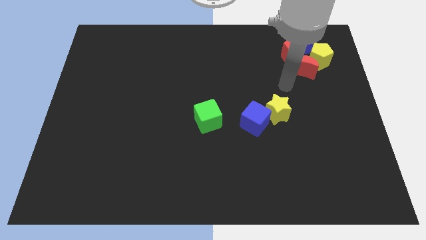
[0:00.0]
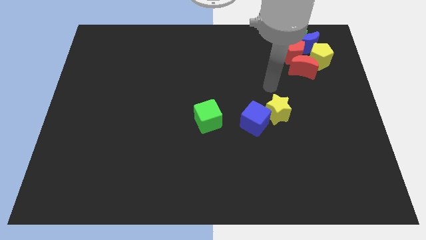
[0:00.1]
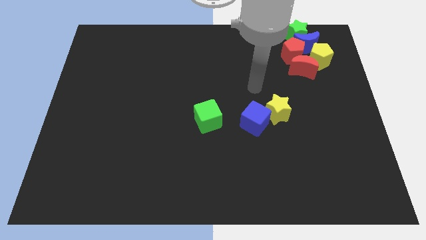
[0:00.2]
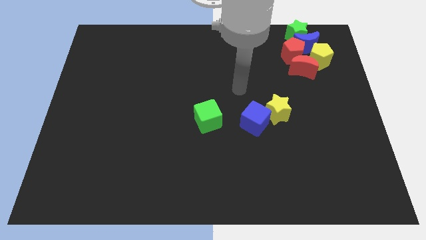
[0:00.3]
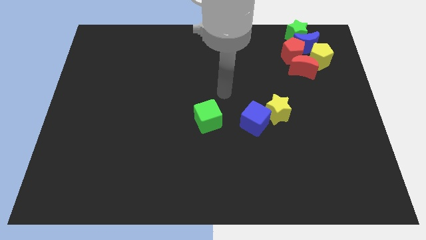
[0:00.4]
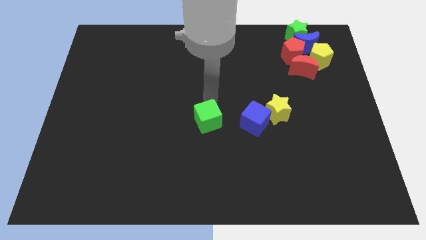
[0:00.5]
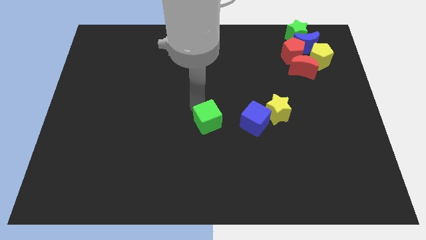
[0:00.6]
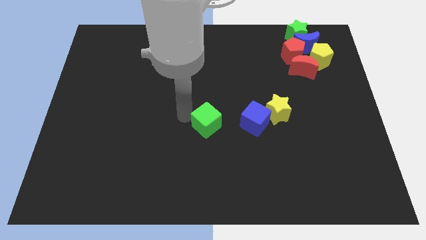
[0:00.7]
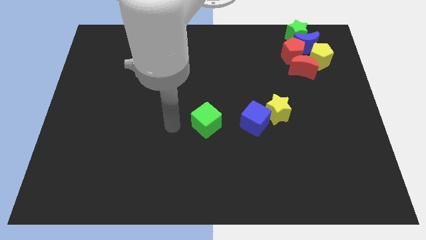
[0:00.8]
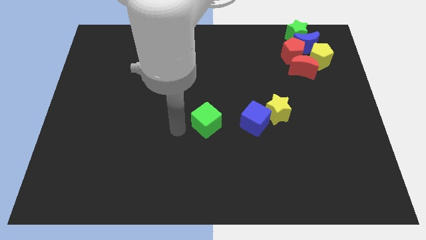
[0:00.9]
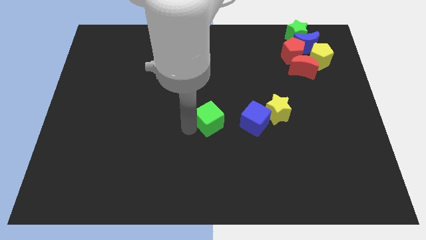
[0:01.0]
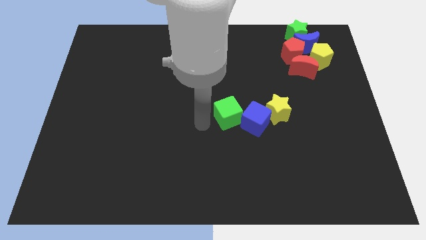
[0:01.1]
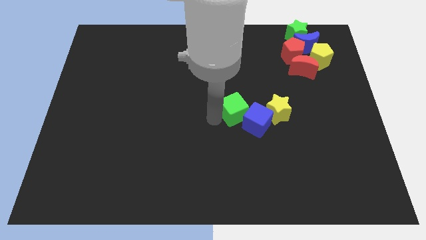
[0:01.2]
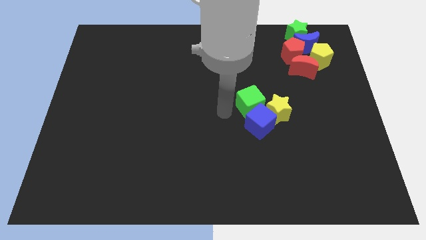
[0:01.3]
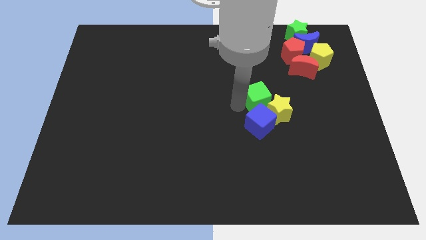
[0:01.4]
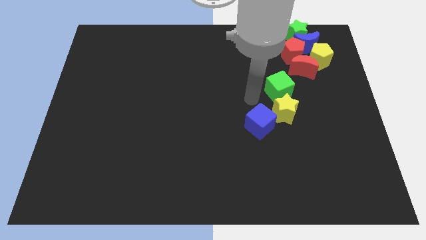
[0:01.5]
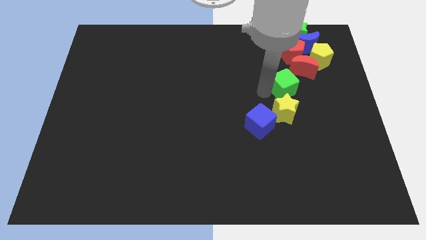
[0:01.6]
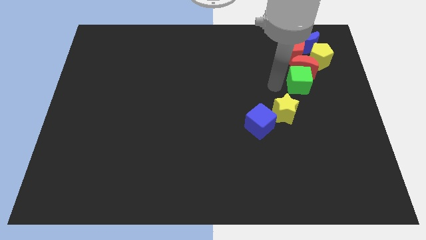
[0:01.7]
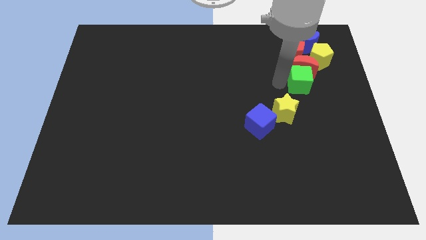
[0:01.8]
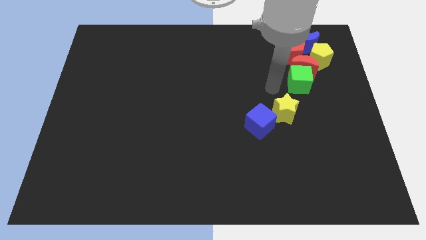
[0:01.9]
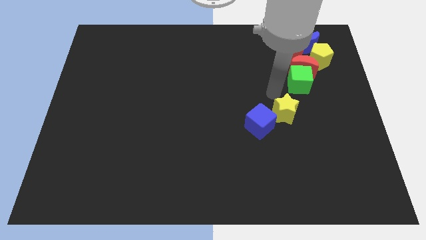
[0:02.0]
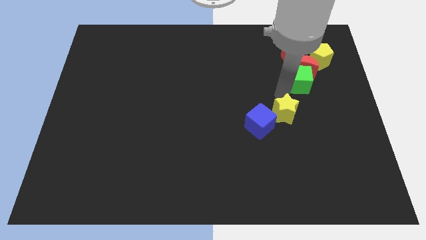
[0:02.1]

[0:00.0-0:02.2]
place the green cube below the red crescent

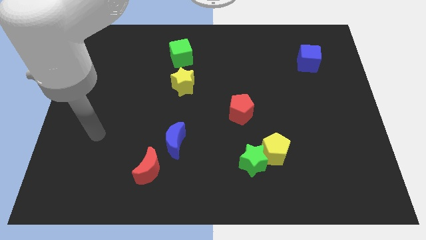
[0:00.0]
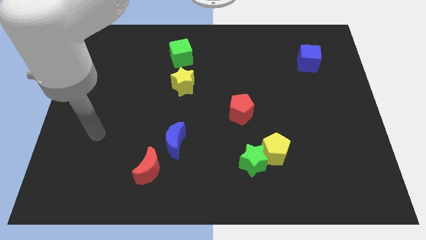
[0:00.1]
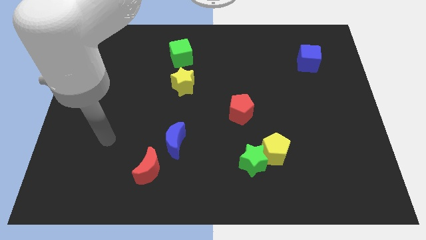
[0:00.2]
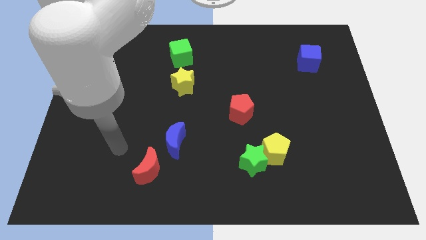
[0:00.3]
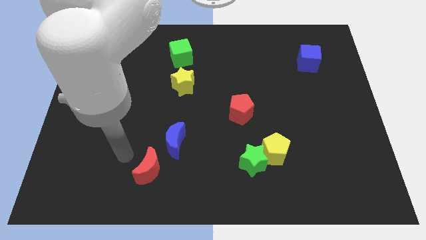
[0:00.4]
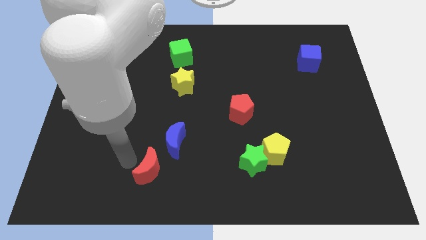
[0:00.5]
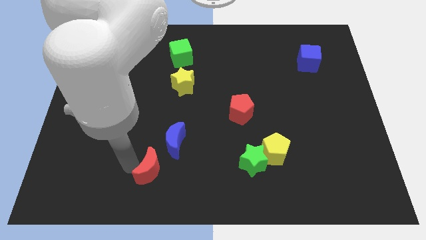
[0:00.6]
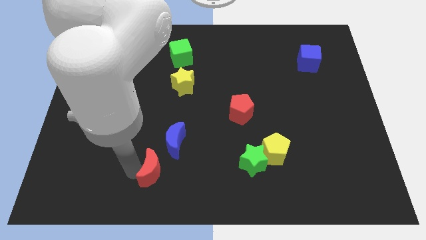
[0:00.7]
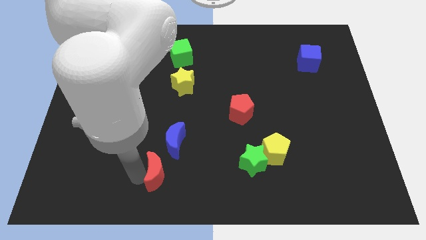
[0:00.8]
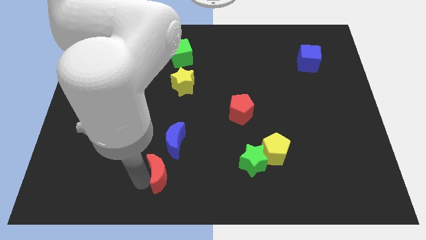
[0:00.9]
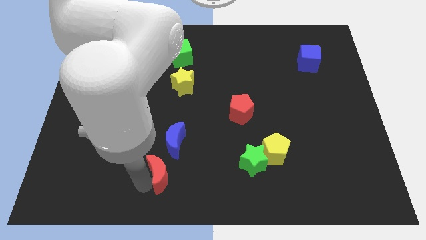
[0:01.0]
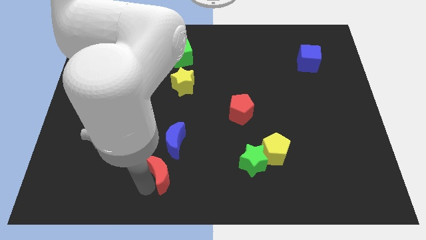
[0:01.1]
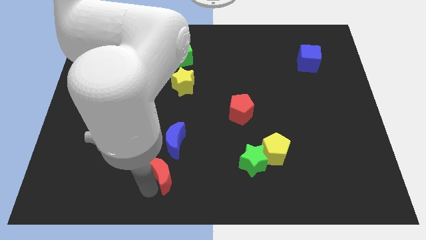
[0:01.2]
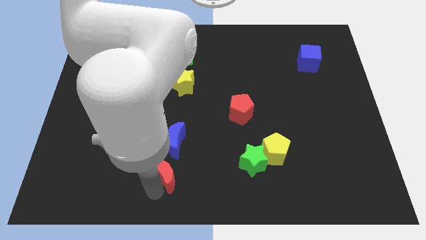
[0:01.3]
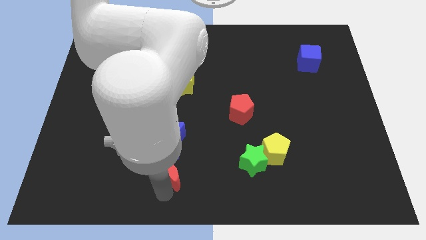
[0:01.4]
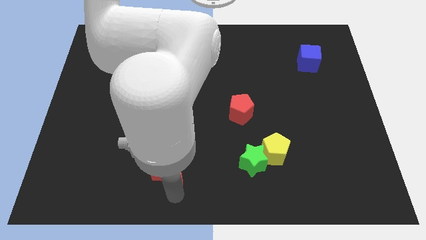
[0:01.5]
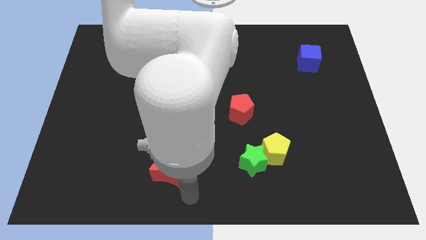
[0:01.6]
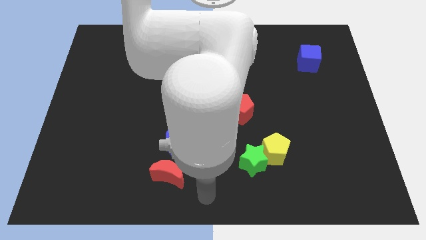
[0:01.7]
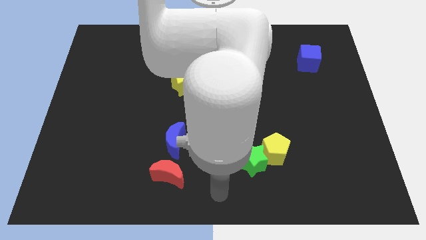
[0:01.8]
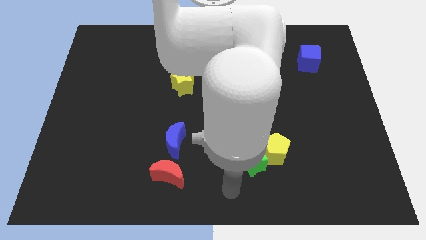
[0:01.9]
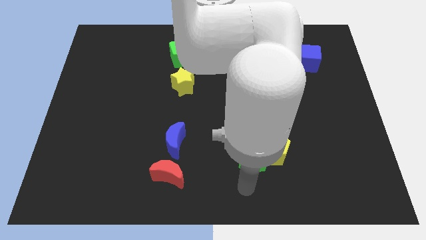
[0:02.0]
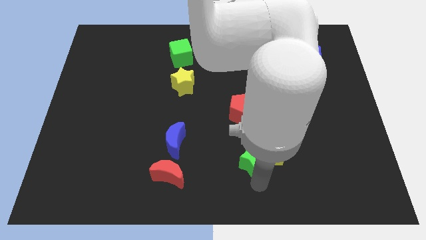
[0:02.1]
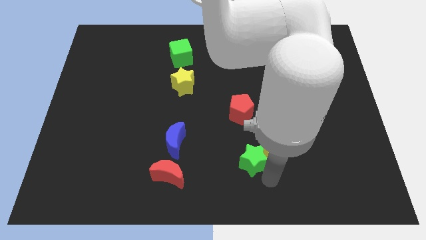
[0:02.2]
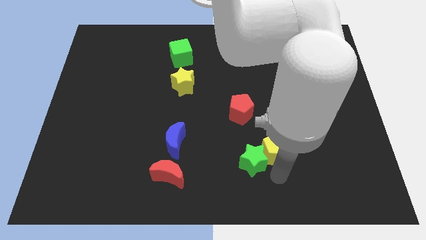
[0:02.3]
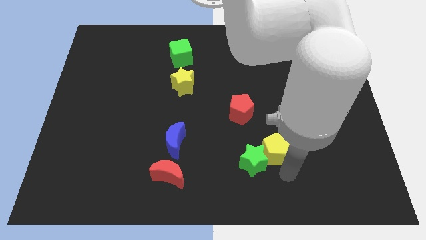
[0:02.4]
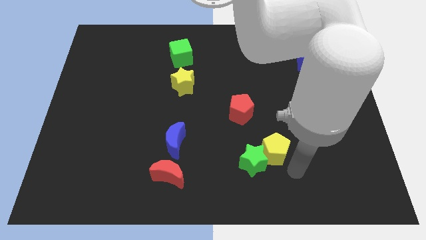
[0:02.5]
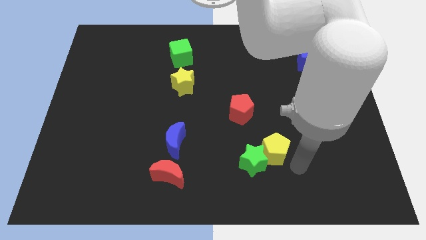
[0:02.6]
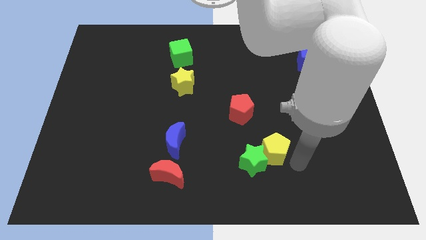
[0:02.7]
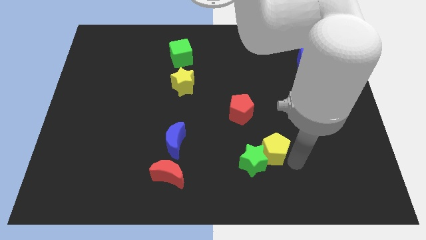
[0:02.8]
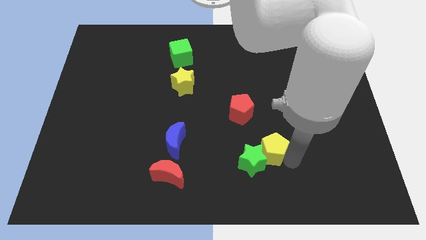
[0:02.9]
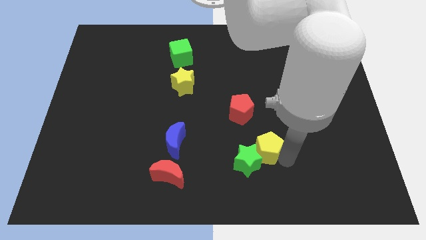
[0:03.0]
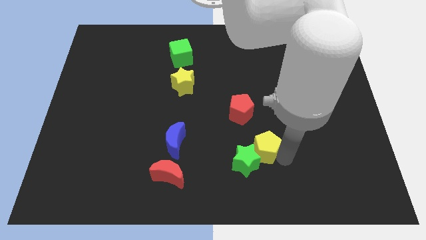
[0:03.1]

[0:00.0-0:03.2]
place the red moon below the blue moon

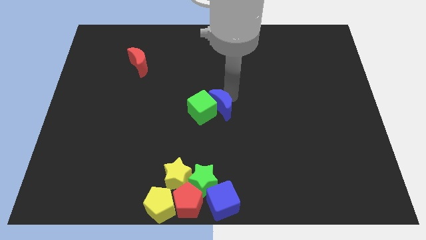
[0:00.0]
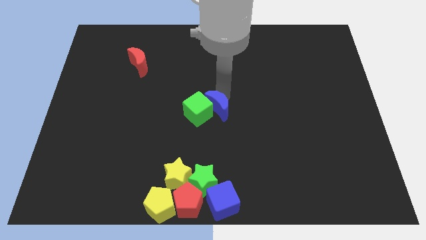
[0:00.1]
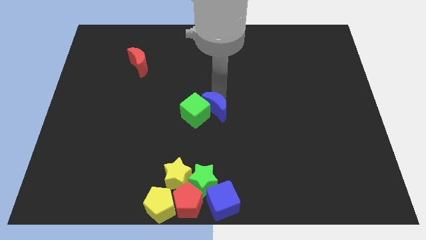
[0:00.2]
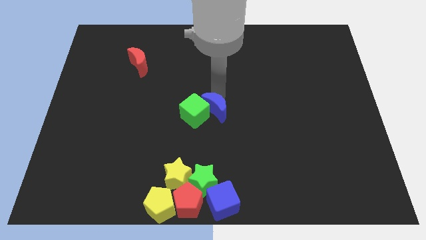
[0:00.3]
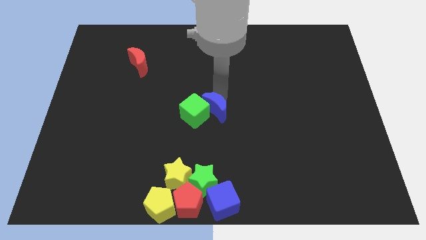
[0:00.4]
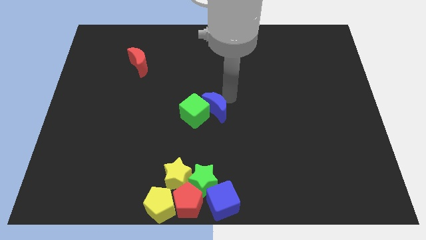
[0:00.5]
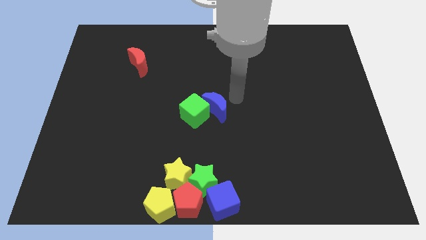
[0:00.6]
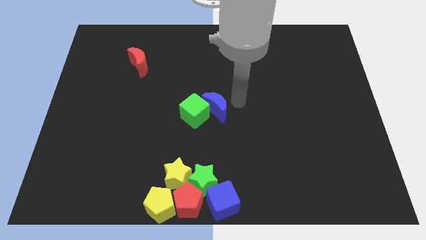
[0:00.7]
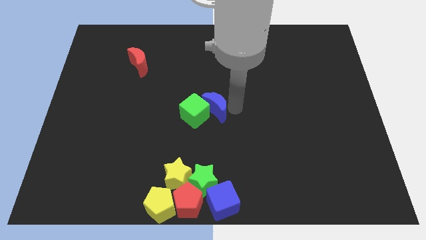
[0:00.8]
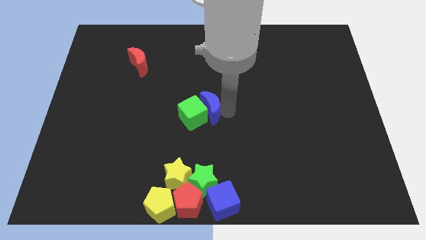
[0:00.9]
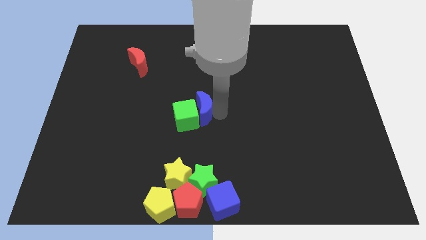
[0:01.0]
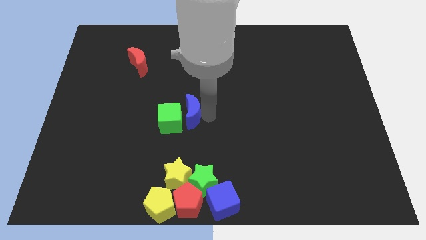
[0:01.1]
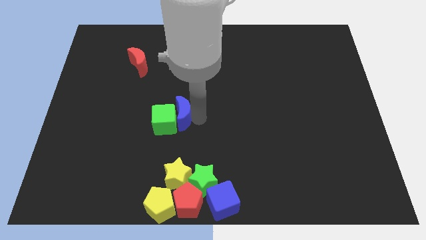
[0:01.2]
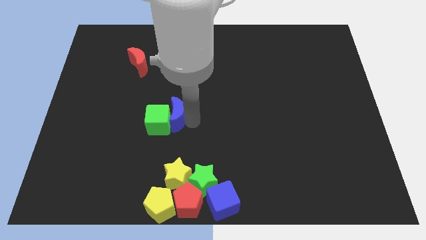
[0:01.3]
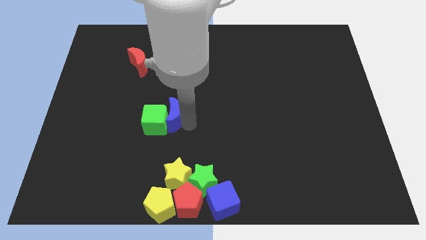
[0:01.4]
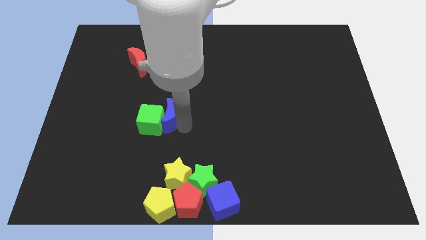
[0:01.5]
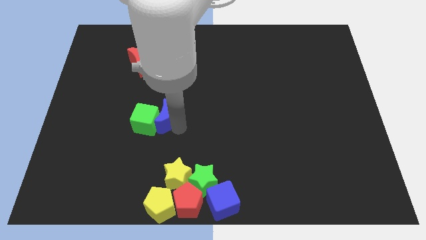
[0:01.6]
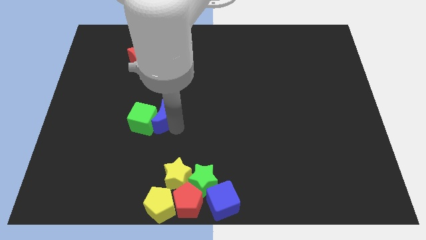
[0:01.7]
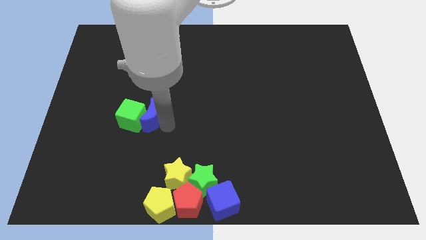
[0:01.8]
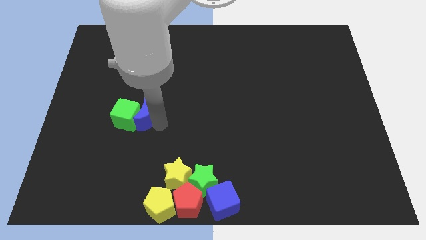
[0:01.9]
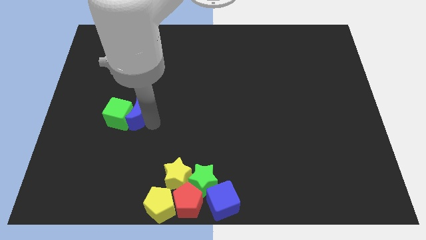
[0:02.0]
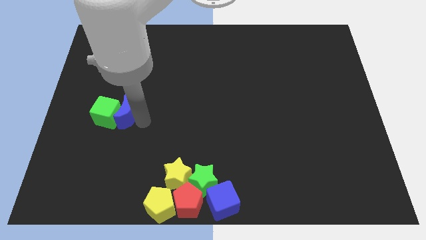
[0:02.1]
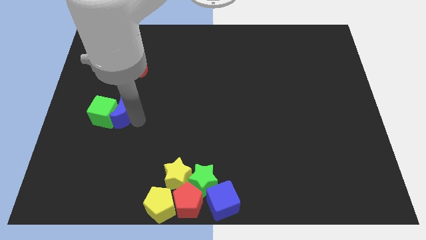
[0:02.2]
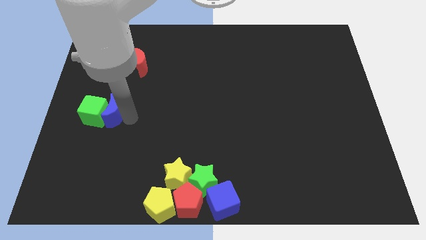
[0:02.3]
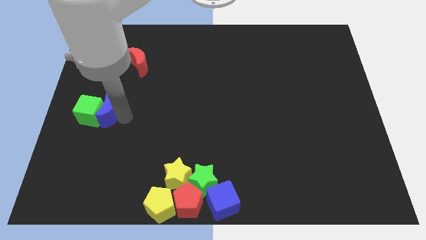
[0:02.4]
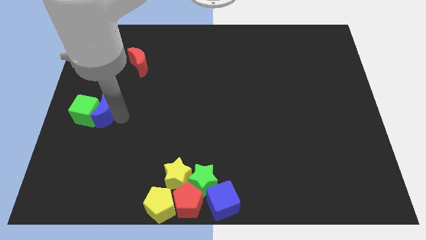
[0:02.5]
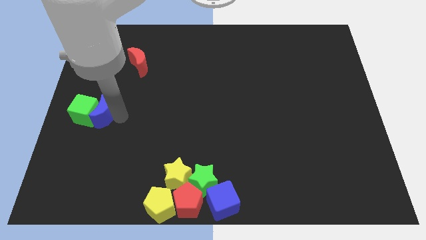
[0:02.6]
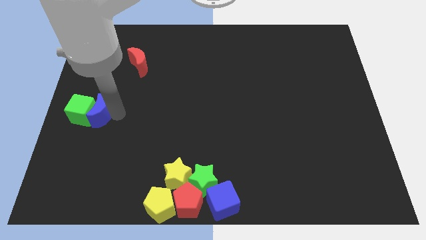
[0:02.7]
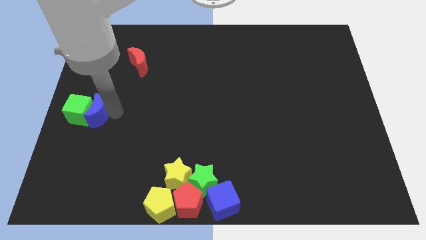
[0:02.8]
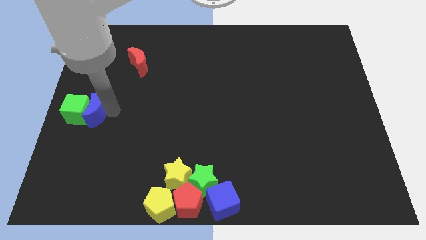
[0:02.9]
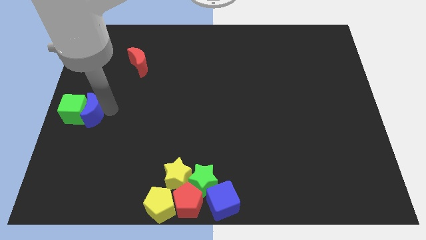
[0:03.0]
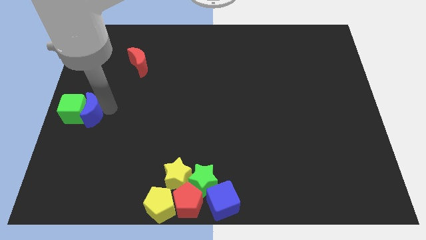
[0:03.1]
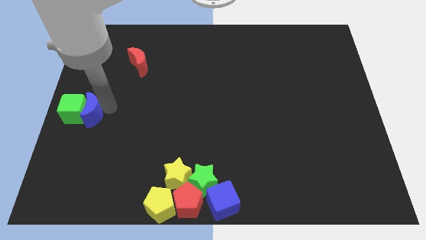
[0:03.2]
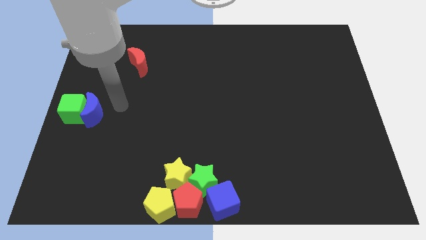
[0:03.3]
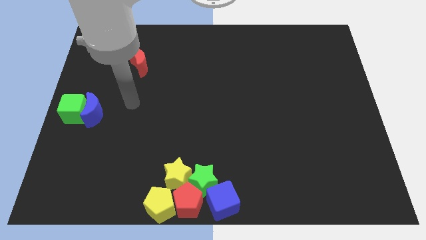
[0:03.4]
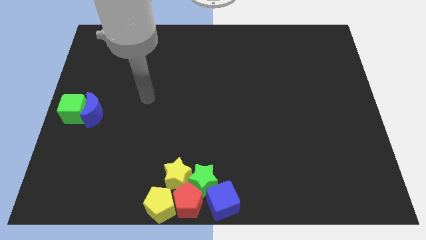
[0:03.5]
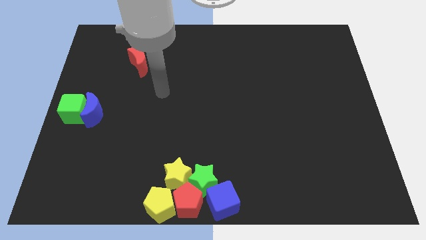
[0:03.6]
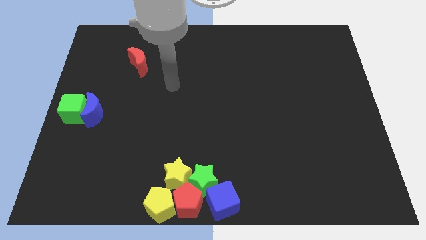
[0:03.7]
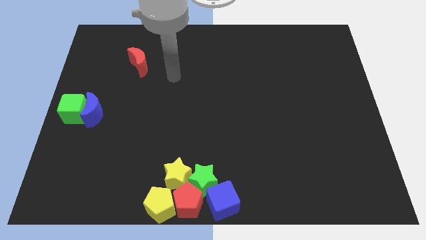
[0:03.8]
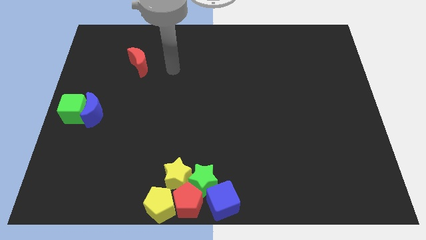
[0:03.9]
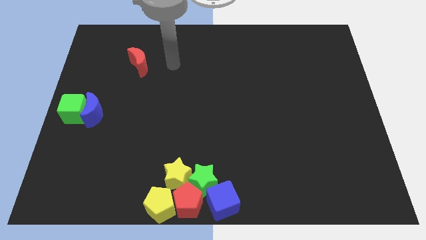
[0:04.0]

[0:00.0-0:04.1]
move the green cube and blue moon left bottom middle of the board
